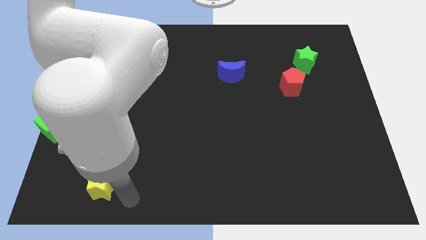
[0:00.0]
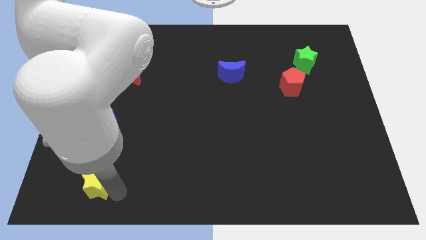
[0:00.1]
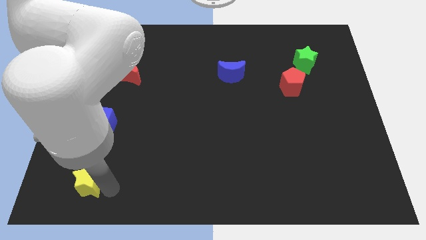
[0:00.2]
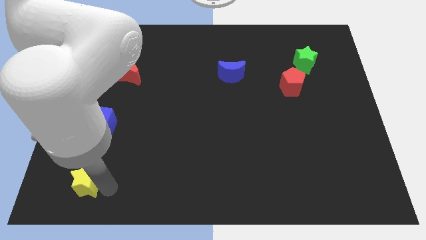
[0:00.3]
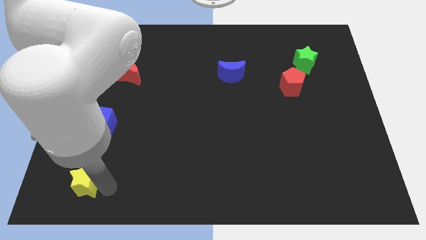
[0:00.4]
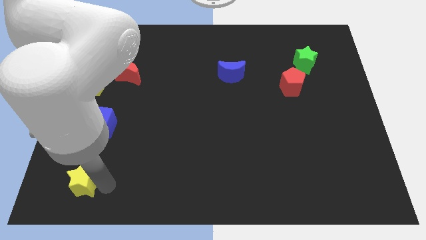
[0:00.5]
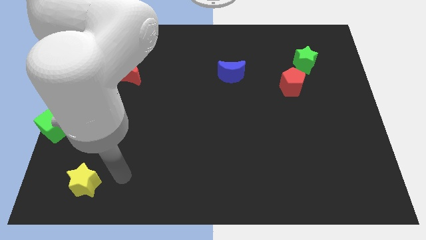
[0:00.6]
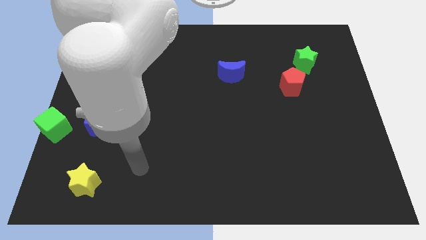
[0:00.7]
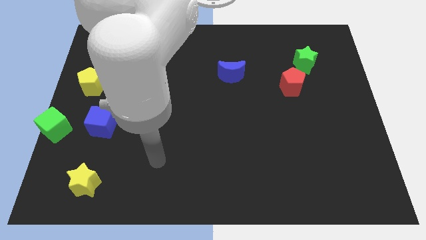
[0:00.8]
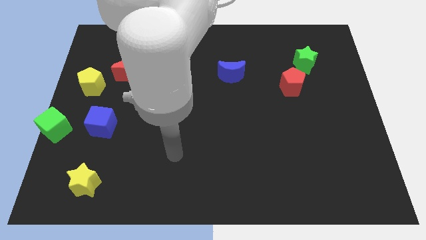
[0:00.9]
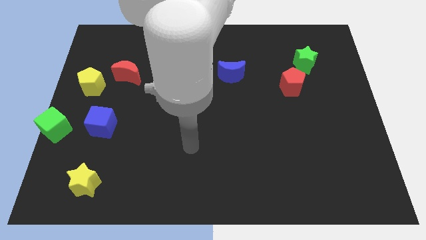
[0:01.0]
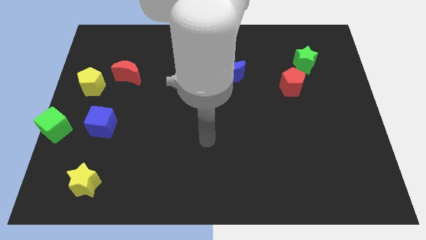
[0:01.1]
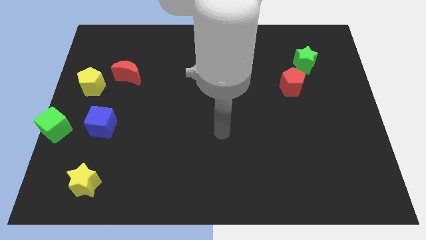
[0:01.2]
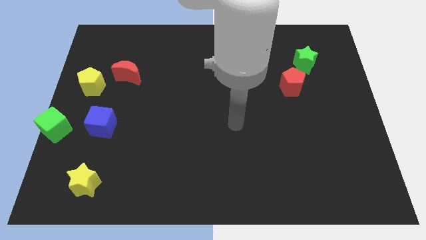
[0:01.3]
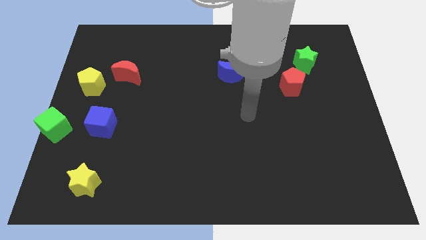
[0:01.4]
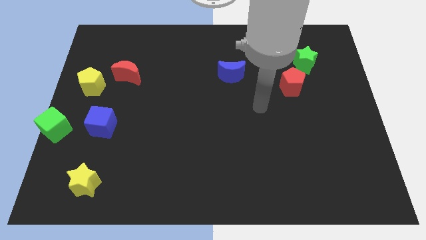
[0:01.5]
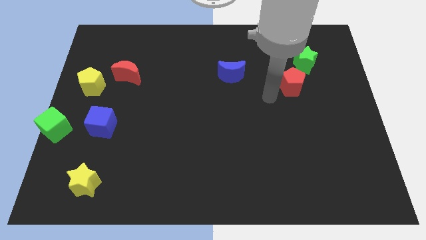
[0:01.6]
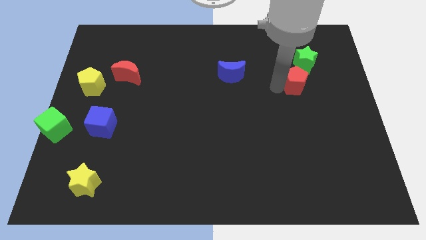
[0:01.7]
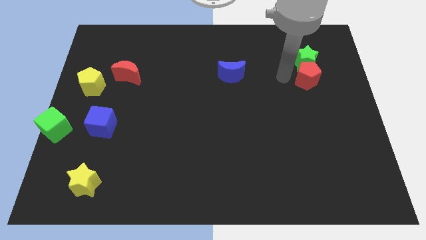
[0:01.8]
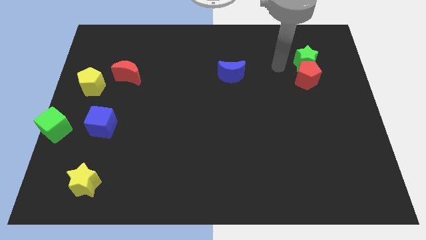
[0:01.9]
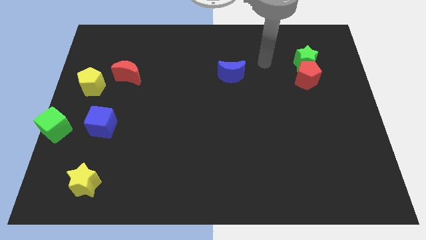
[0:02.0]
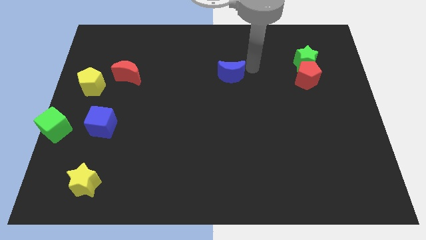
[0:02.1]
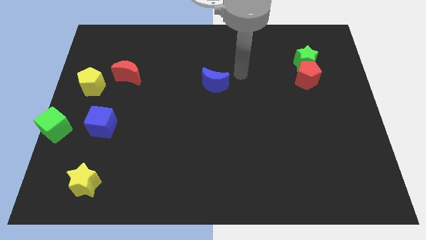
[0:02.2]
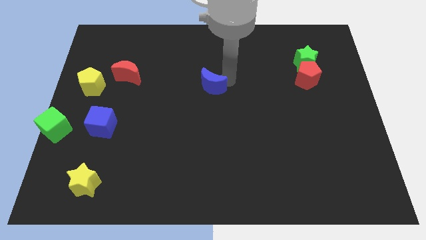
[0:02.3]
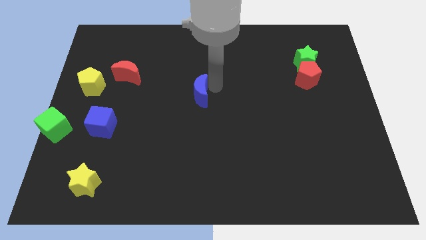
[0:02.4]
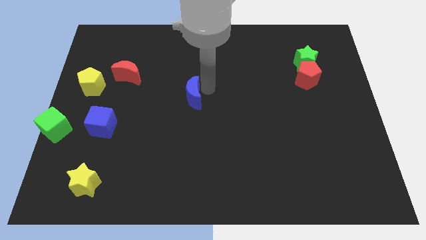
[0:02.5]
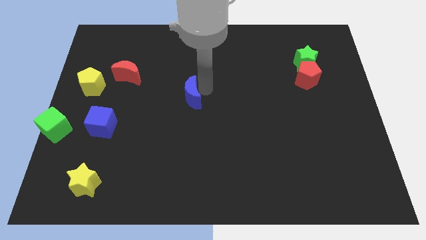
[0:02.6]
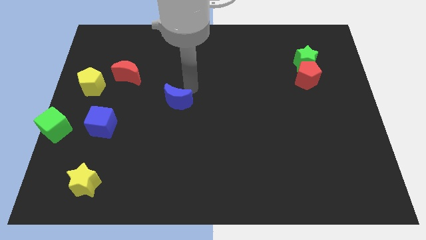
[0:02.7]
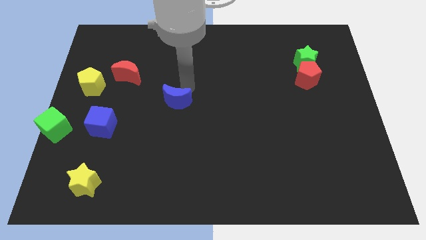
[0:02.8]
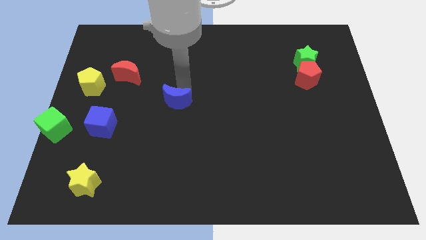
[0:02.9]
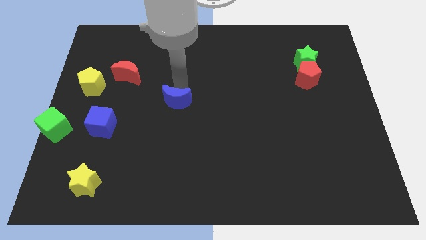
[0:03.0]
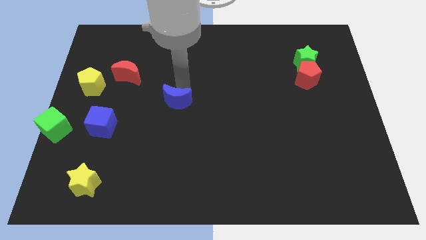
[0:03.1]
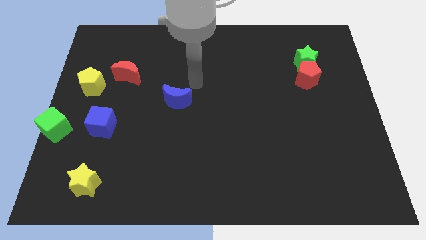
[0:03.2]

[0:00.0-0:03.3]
place the yellow star below the blue cube

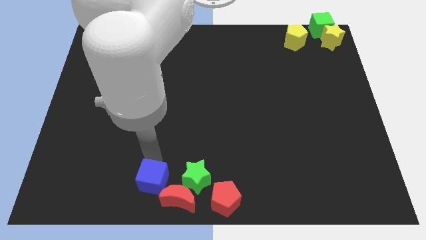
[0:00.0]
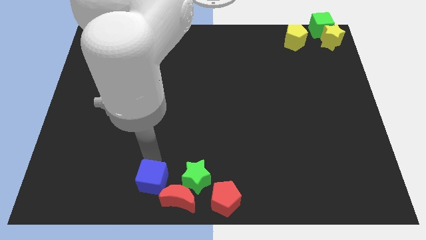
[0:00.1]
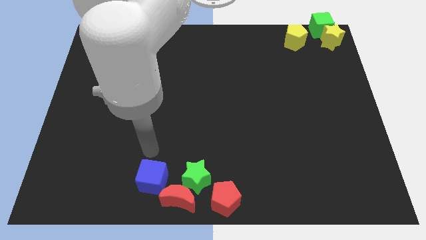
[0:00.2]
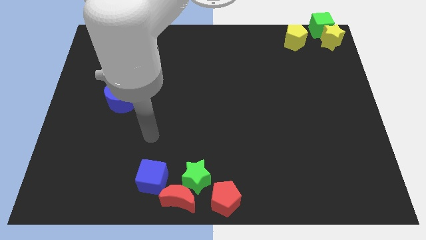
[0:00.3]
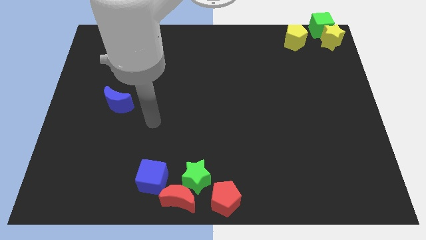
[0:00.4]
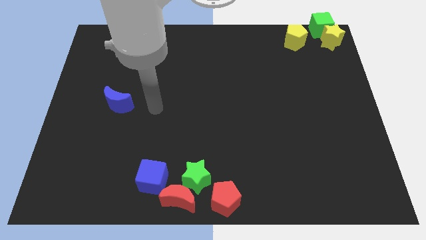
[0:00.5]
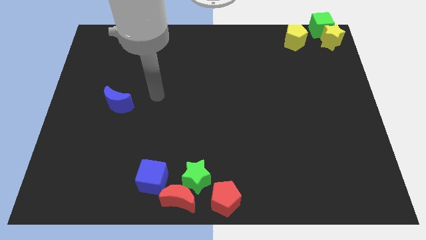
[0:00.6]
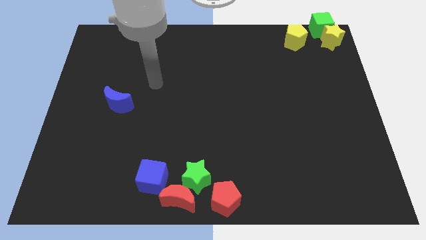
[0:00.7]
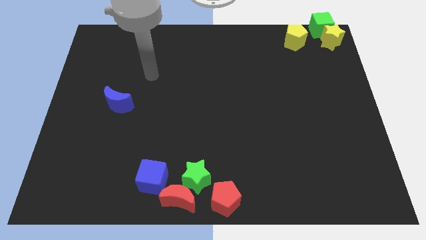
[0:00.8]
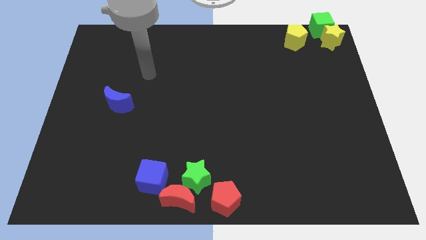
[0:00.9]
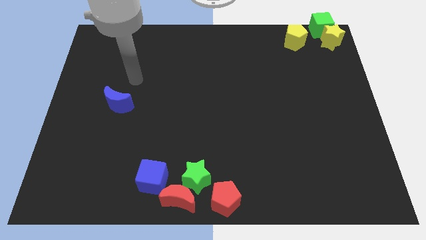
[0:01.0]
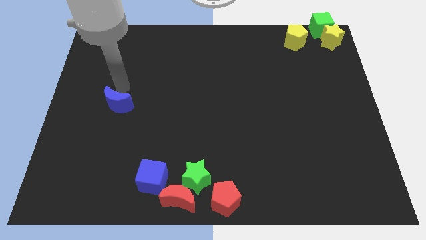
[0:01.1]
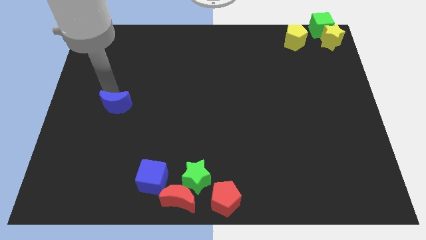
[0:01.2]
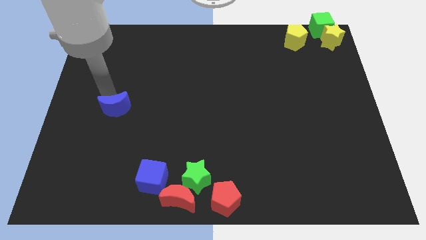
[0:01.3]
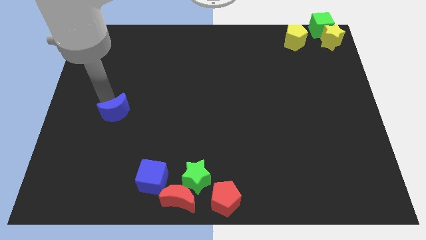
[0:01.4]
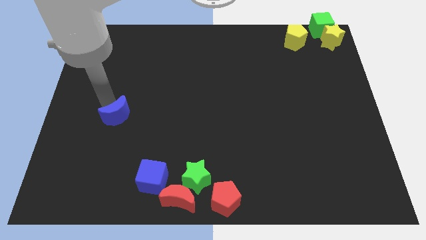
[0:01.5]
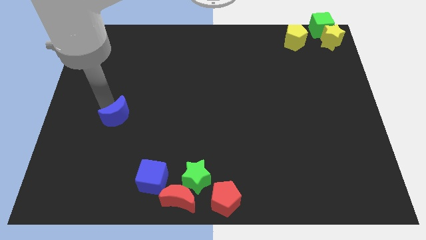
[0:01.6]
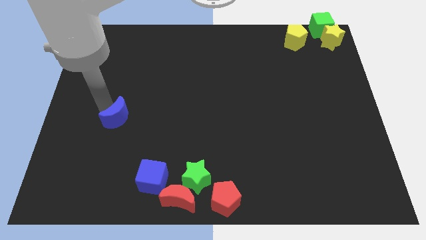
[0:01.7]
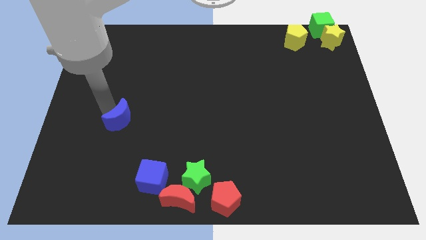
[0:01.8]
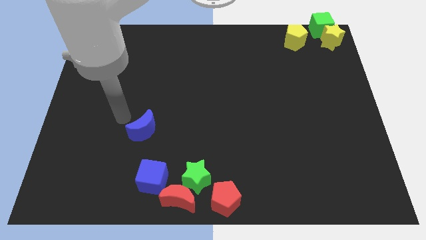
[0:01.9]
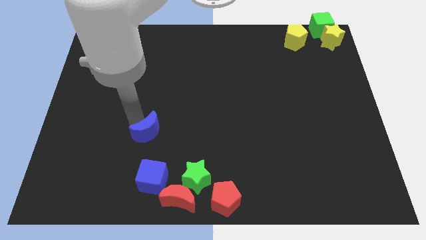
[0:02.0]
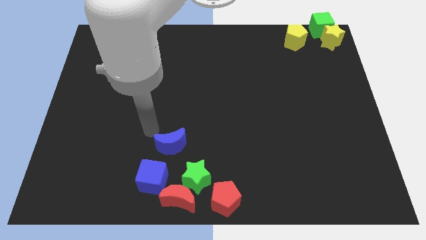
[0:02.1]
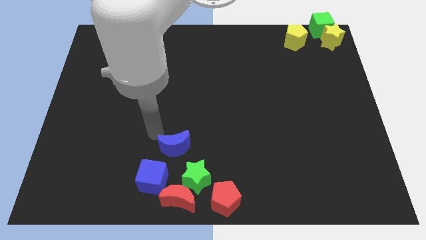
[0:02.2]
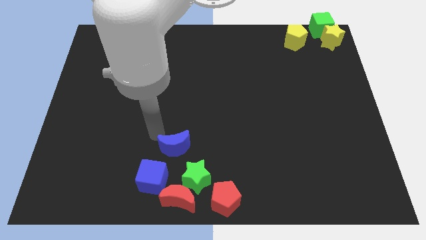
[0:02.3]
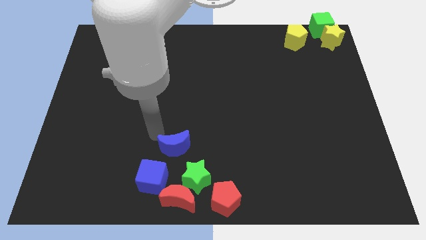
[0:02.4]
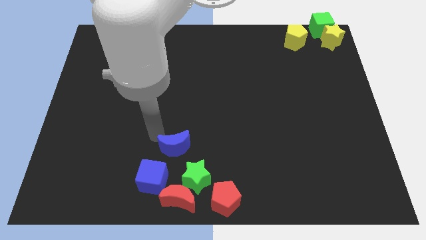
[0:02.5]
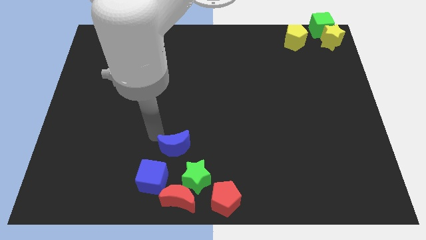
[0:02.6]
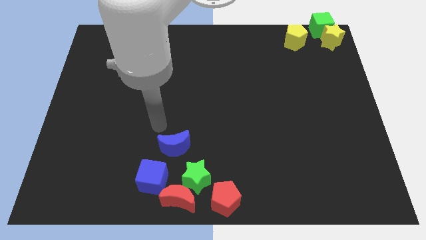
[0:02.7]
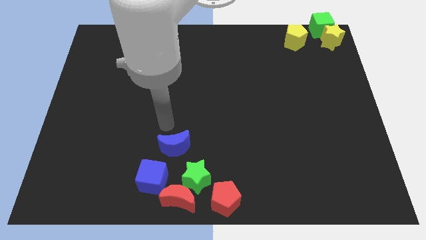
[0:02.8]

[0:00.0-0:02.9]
move the blue moon towards the blue cube and green star

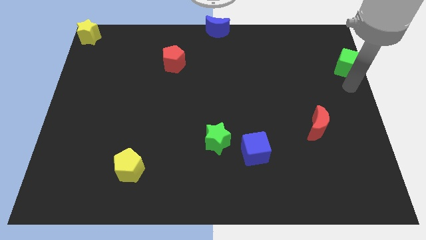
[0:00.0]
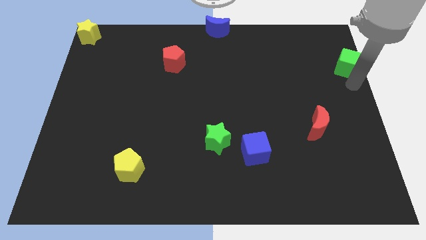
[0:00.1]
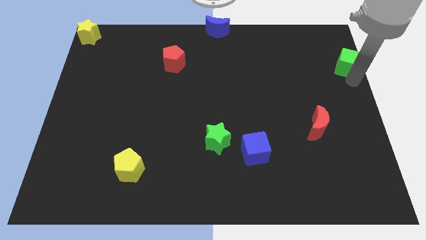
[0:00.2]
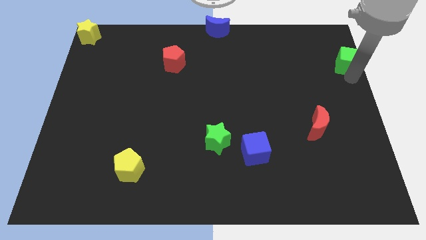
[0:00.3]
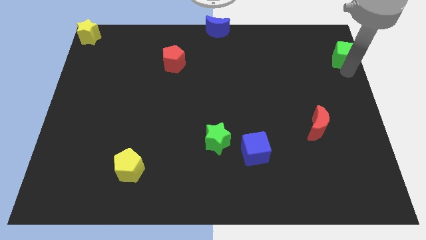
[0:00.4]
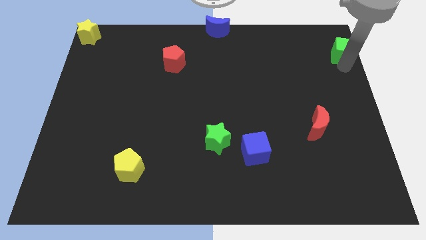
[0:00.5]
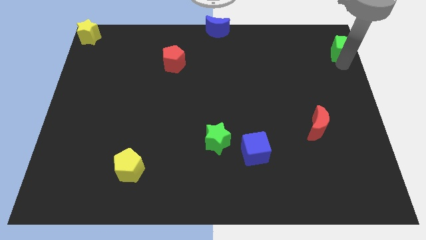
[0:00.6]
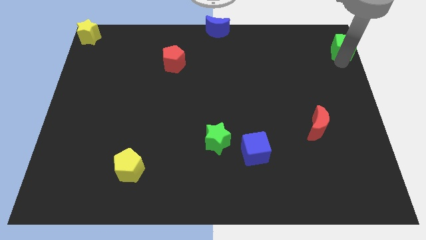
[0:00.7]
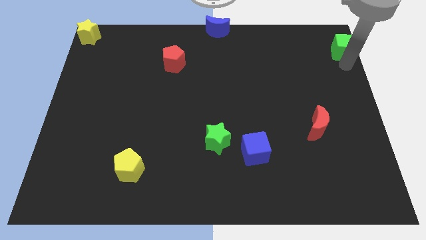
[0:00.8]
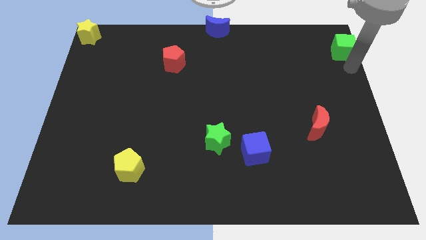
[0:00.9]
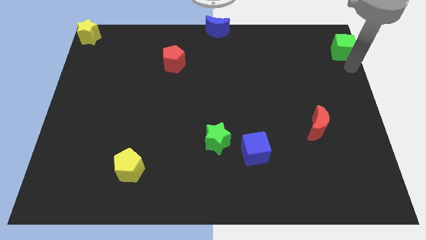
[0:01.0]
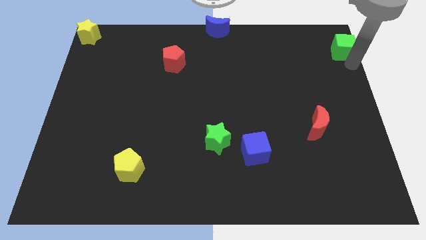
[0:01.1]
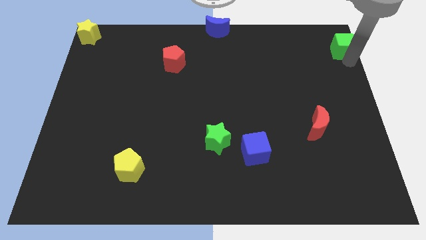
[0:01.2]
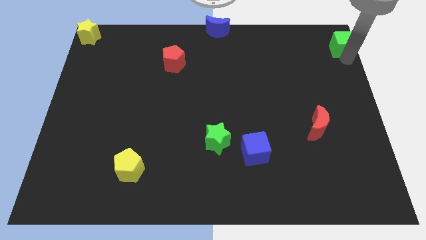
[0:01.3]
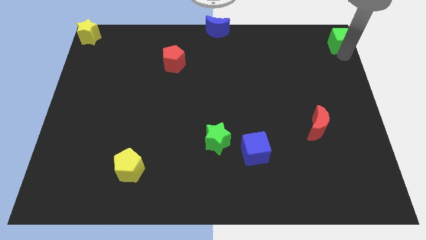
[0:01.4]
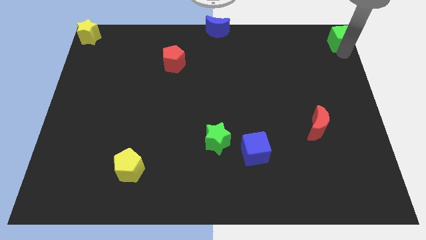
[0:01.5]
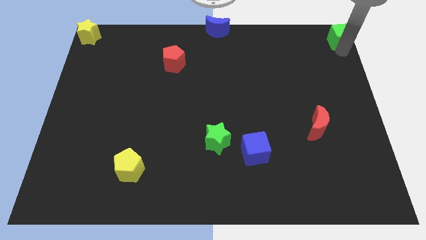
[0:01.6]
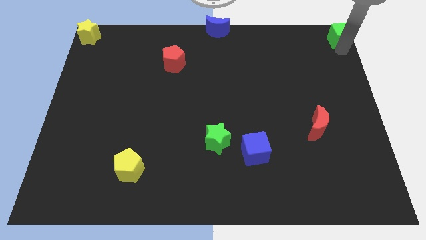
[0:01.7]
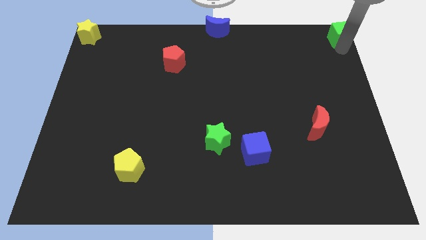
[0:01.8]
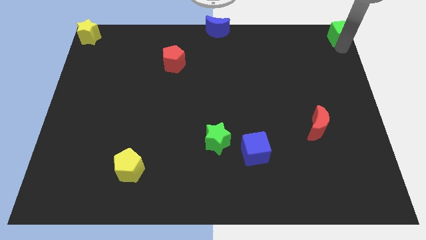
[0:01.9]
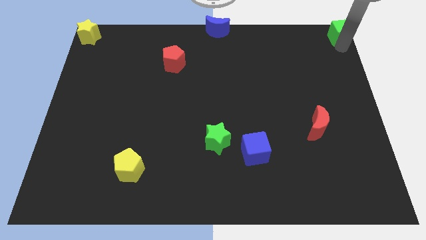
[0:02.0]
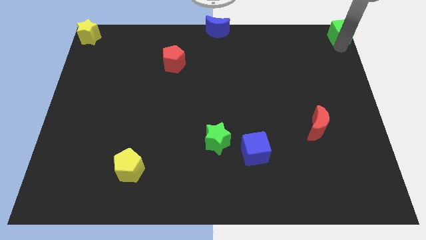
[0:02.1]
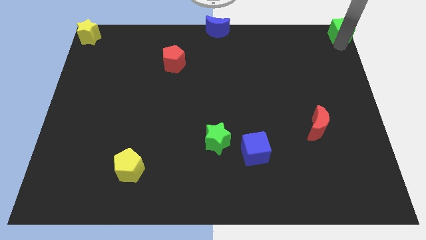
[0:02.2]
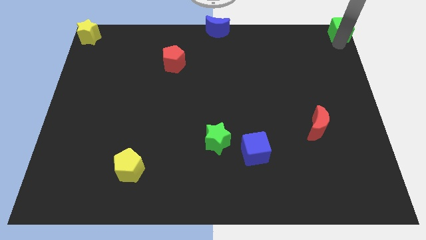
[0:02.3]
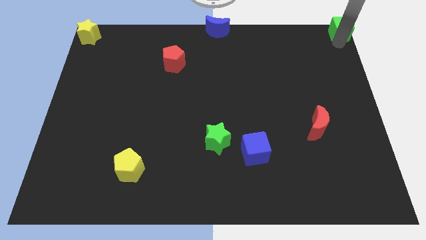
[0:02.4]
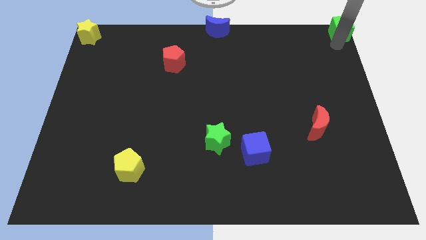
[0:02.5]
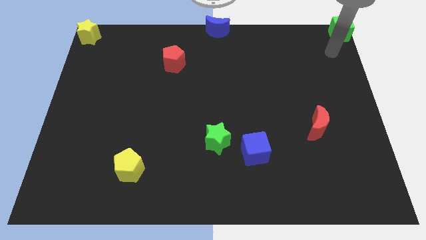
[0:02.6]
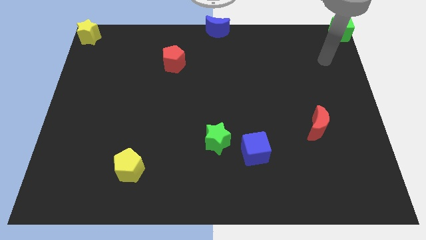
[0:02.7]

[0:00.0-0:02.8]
push the green cube to the top right corner

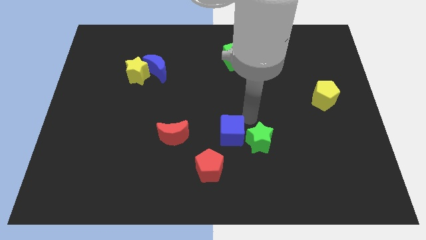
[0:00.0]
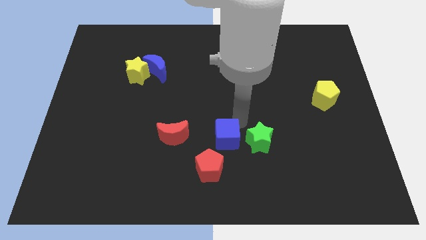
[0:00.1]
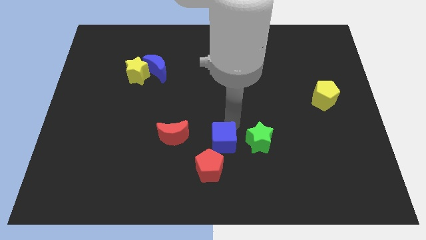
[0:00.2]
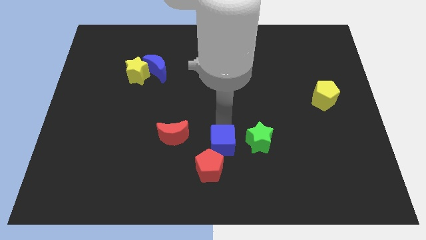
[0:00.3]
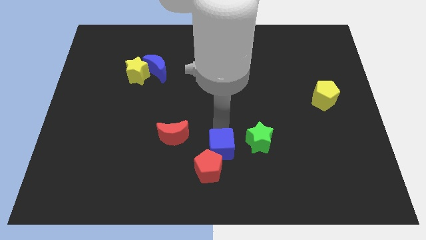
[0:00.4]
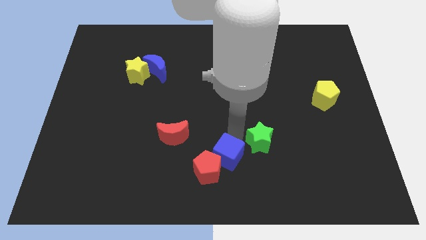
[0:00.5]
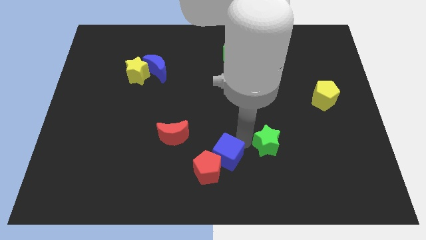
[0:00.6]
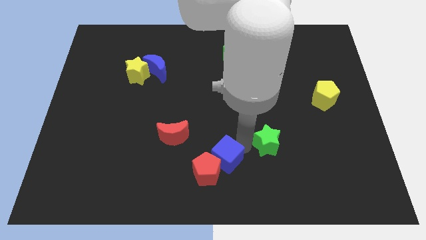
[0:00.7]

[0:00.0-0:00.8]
push the blue cube into the red pentagon
